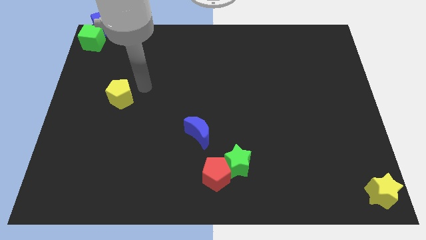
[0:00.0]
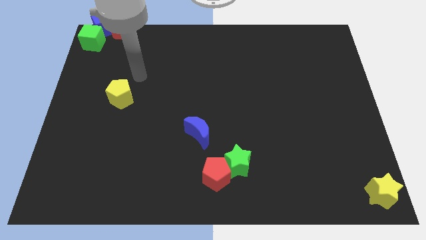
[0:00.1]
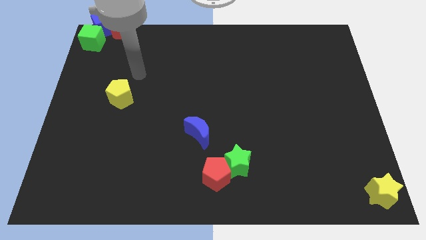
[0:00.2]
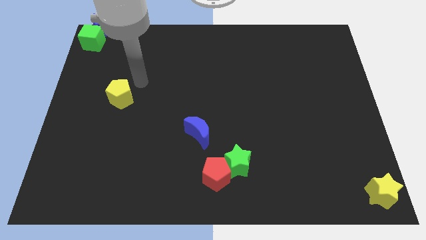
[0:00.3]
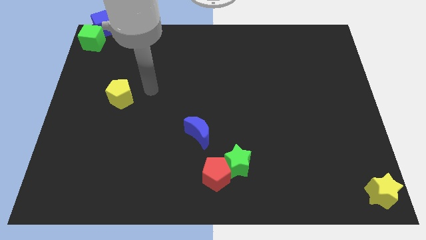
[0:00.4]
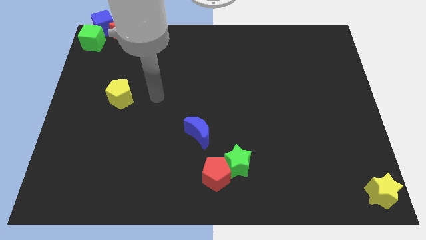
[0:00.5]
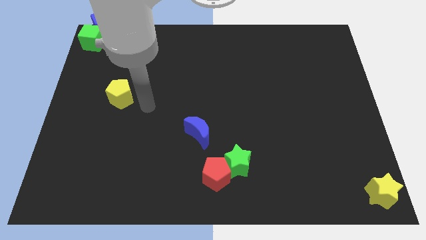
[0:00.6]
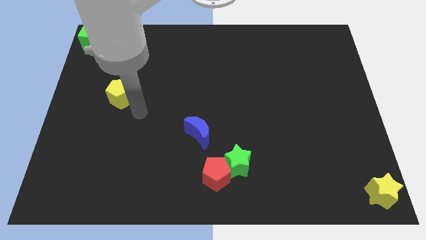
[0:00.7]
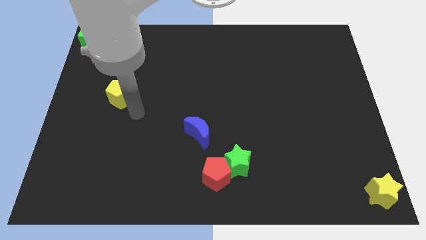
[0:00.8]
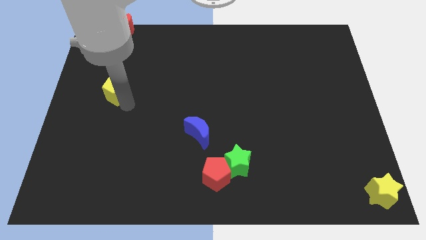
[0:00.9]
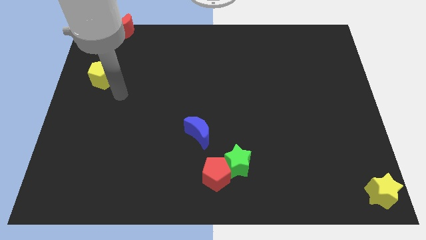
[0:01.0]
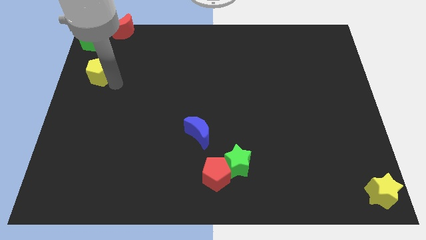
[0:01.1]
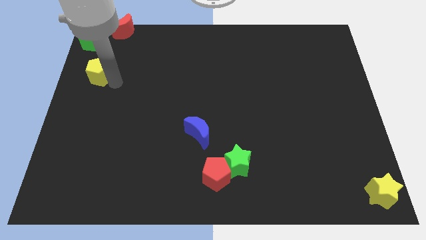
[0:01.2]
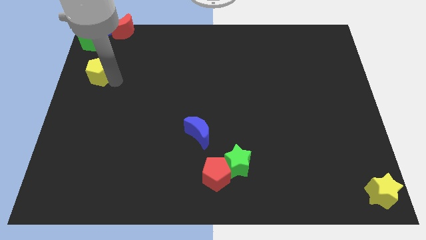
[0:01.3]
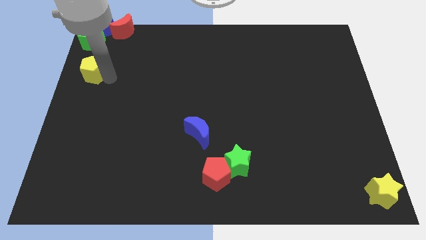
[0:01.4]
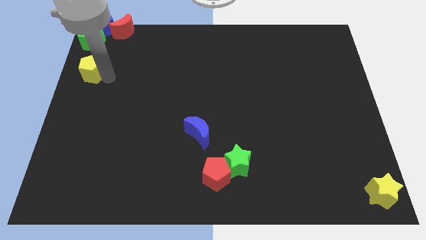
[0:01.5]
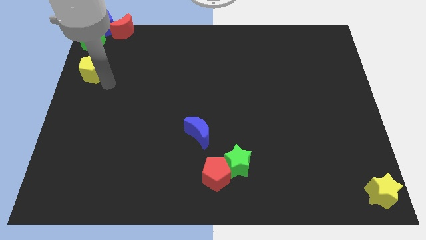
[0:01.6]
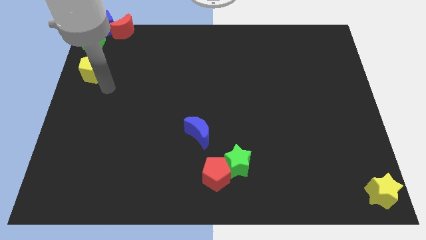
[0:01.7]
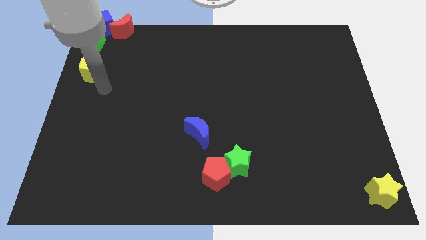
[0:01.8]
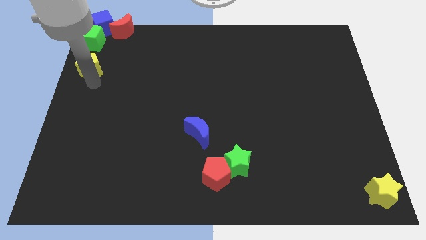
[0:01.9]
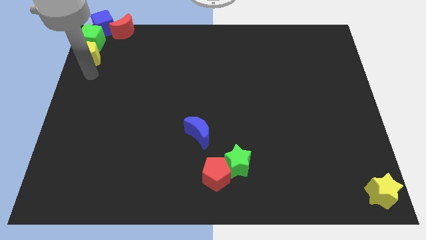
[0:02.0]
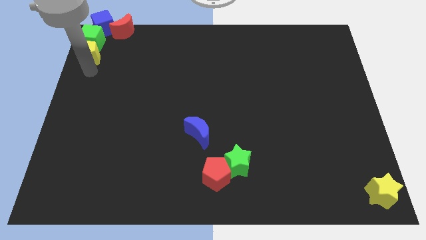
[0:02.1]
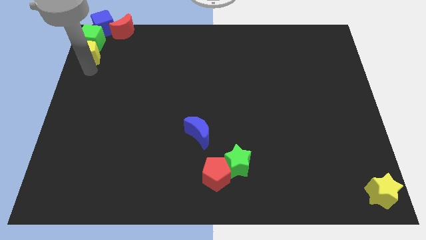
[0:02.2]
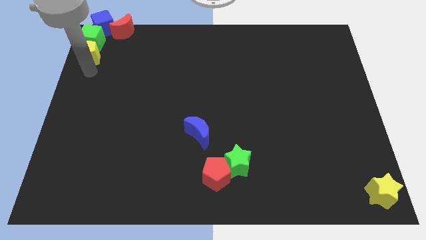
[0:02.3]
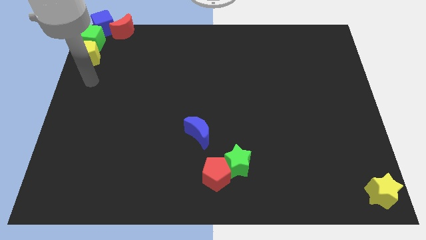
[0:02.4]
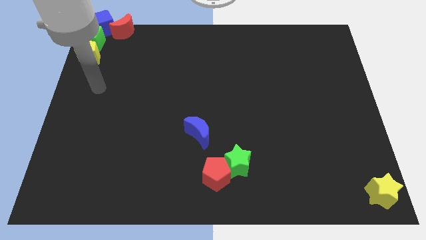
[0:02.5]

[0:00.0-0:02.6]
place the yellow pentagon below into green cube

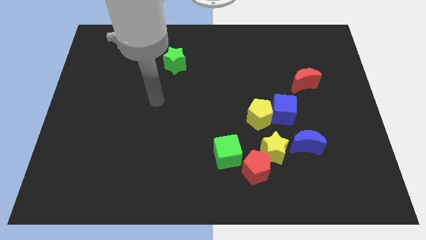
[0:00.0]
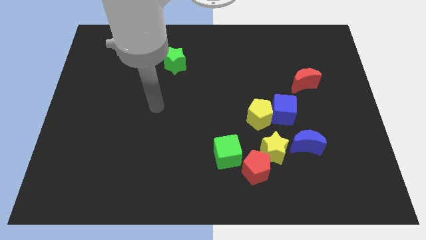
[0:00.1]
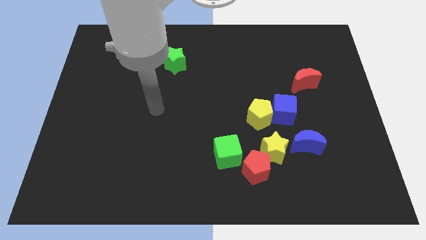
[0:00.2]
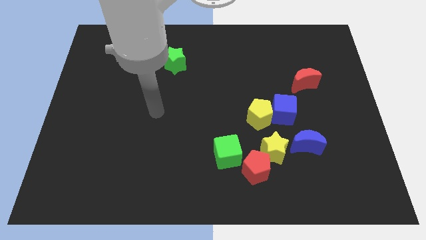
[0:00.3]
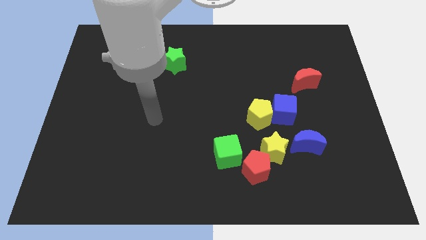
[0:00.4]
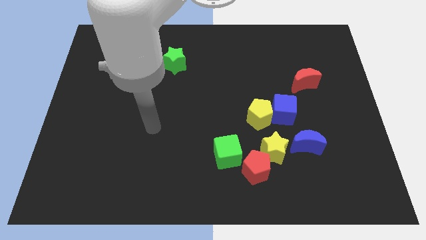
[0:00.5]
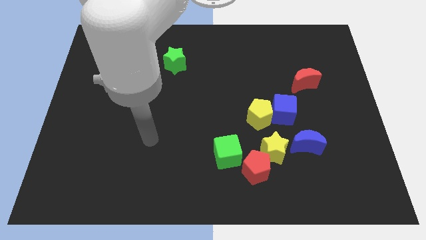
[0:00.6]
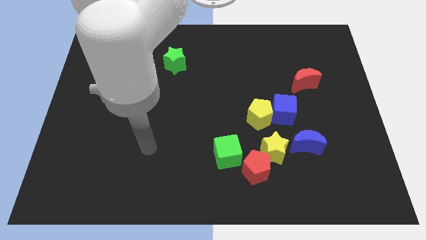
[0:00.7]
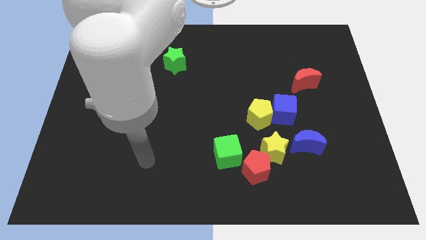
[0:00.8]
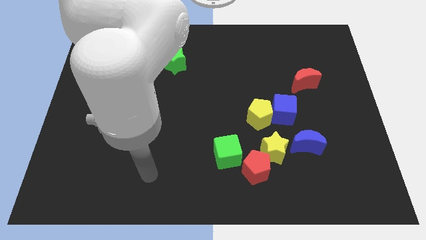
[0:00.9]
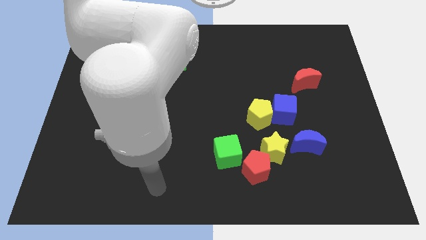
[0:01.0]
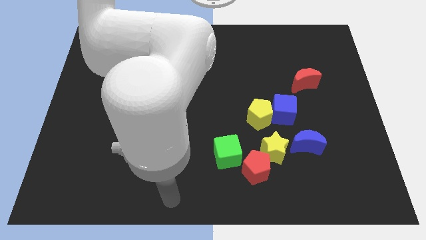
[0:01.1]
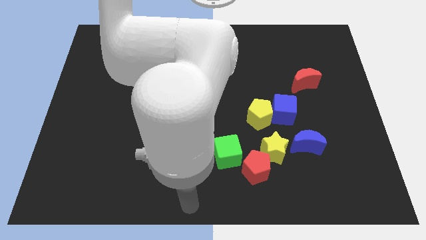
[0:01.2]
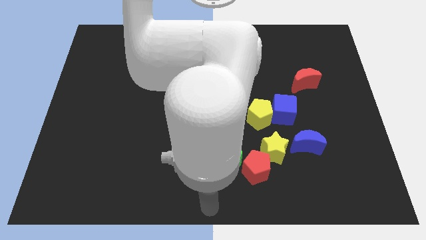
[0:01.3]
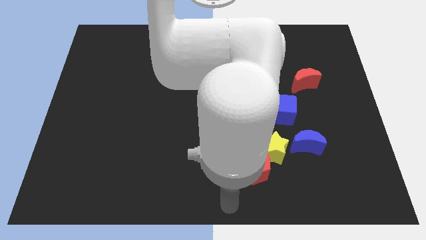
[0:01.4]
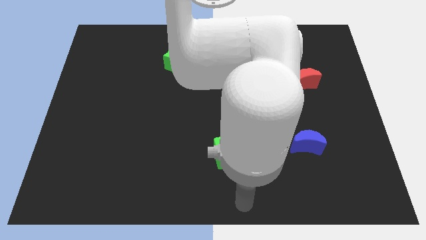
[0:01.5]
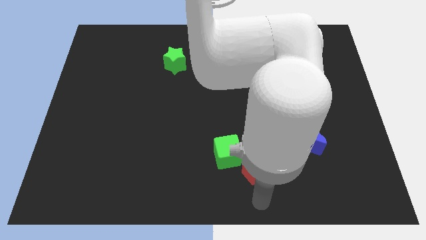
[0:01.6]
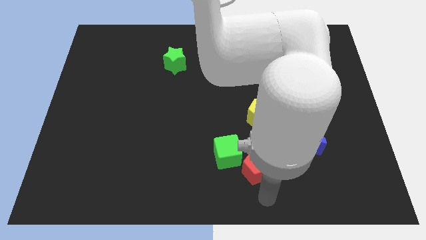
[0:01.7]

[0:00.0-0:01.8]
point your arm at the bottom of the red pentagon

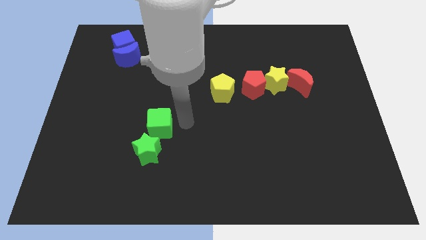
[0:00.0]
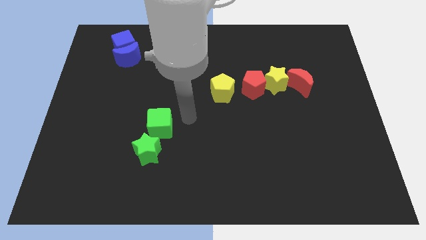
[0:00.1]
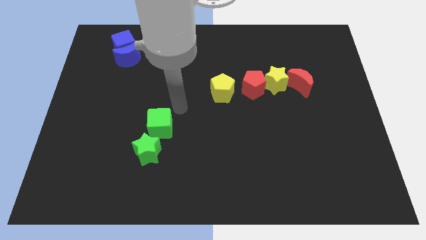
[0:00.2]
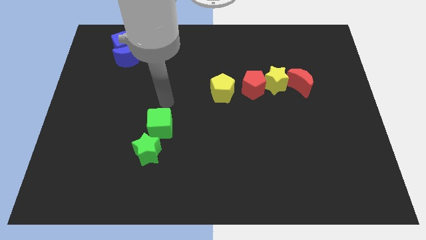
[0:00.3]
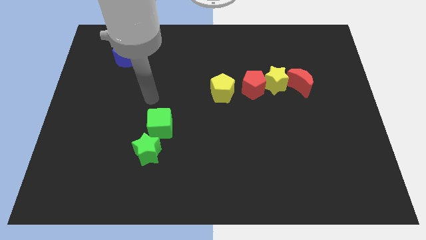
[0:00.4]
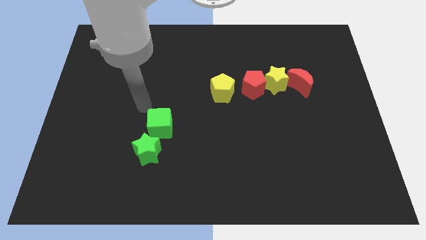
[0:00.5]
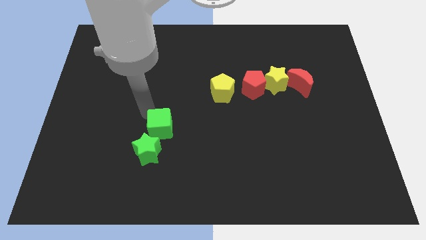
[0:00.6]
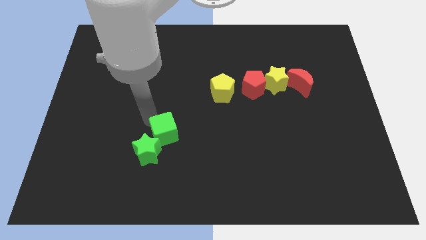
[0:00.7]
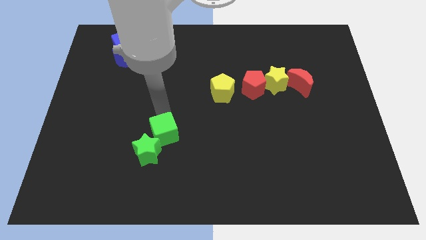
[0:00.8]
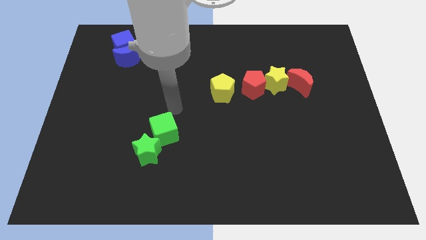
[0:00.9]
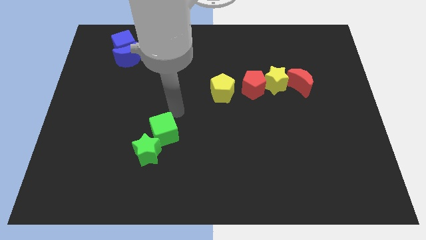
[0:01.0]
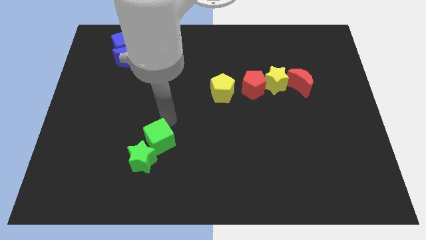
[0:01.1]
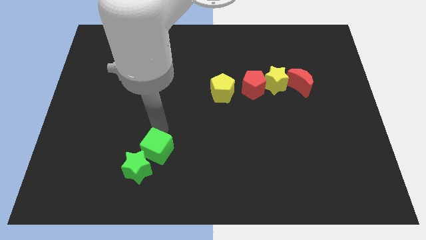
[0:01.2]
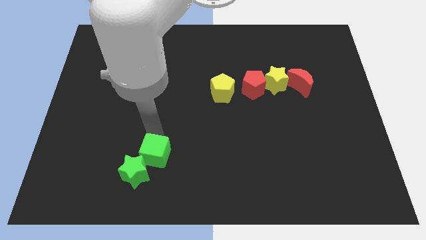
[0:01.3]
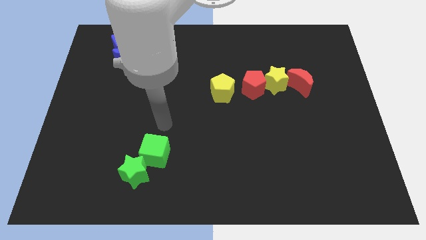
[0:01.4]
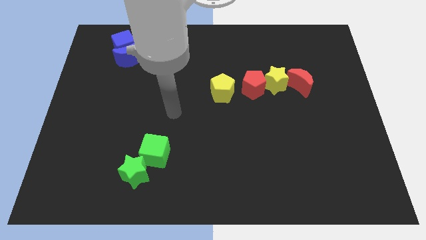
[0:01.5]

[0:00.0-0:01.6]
push the green blocks to the bottom side

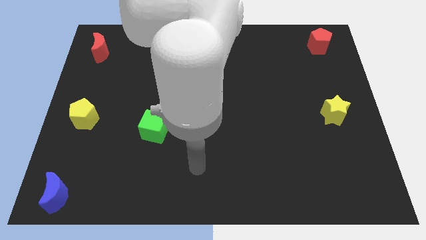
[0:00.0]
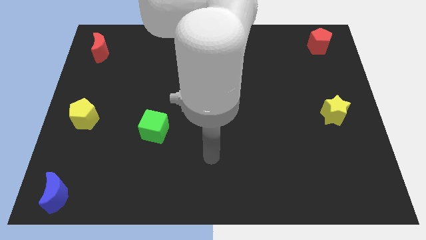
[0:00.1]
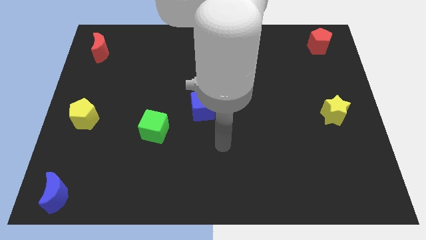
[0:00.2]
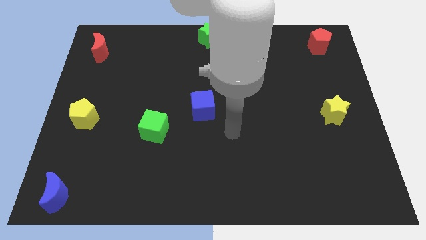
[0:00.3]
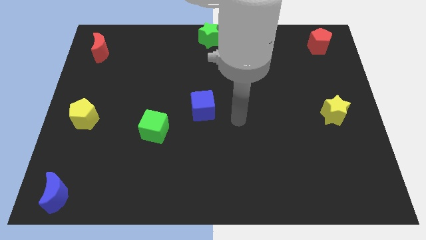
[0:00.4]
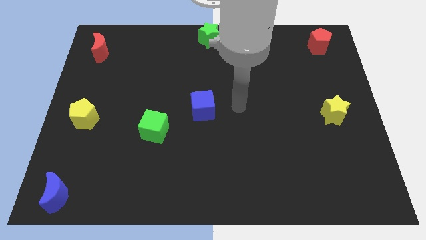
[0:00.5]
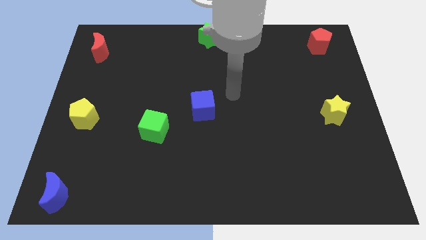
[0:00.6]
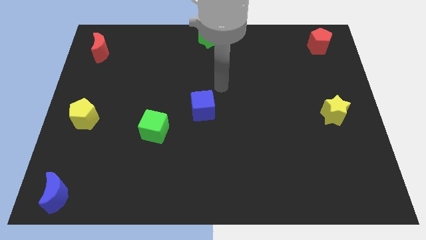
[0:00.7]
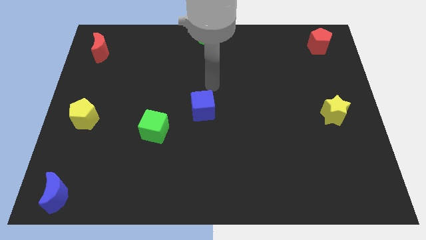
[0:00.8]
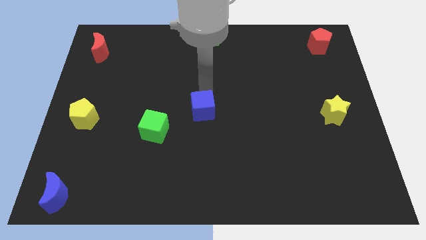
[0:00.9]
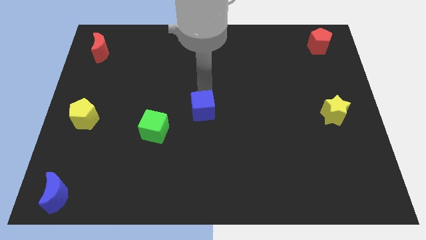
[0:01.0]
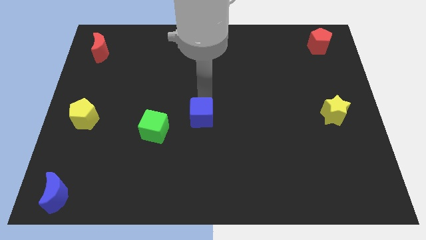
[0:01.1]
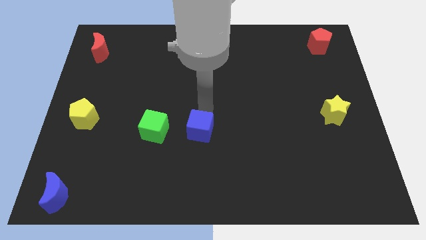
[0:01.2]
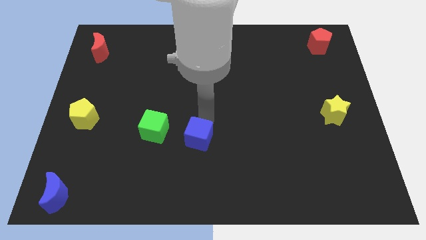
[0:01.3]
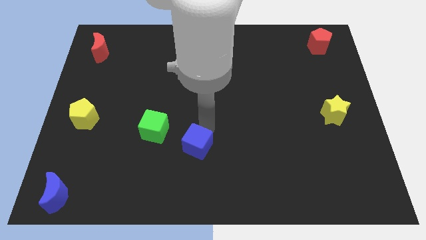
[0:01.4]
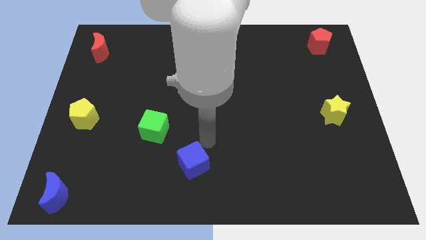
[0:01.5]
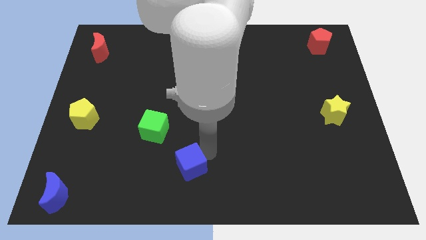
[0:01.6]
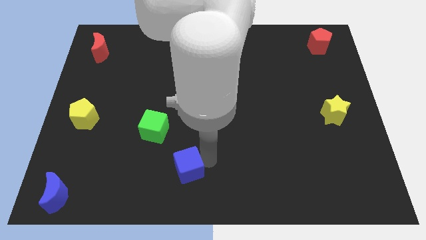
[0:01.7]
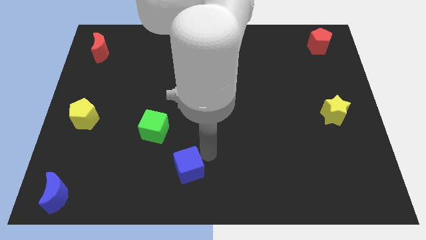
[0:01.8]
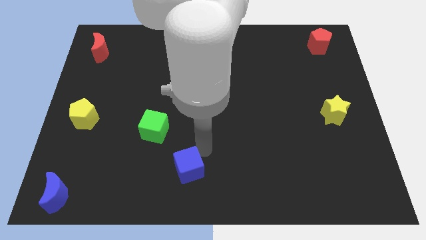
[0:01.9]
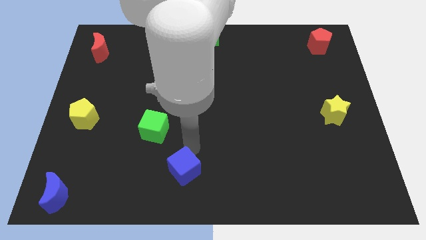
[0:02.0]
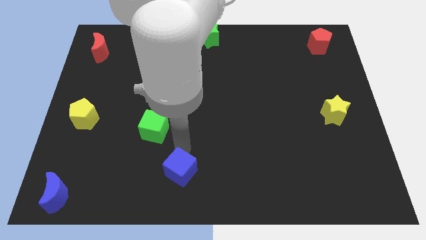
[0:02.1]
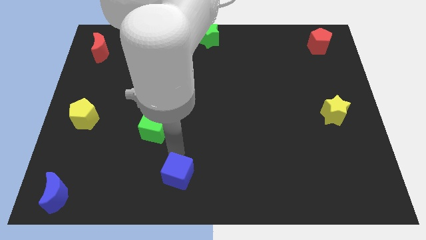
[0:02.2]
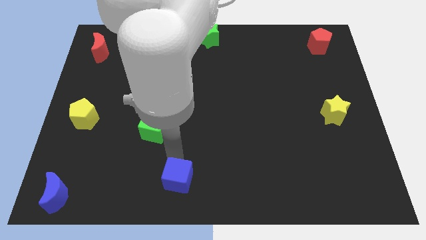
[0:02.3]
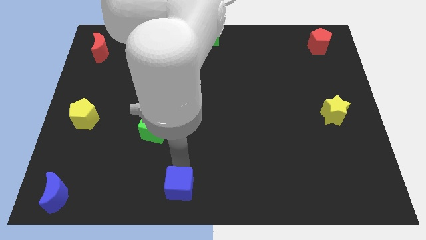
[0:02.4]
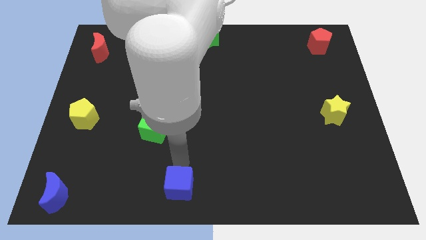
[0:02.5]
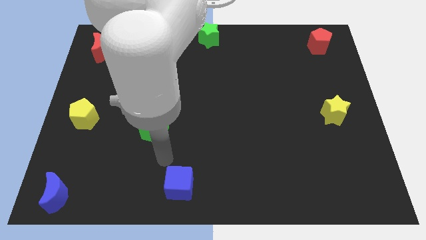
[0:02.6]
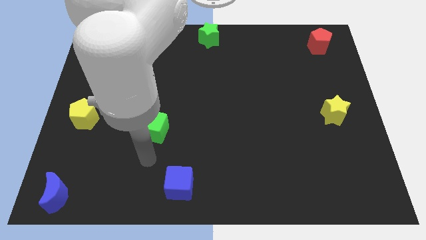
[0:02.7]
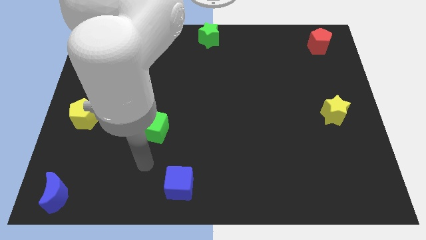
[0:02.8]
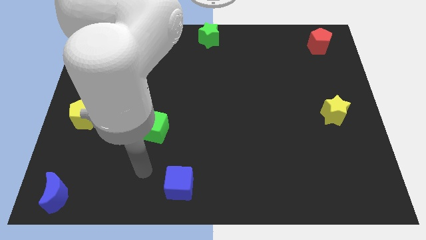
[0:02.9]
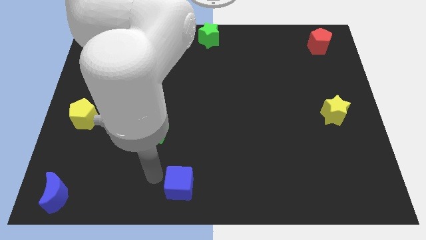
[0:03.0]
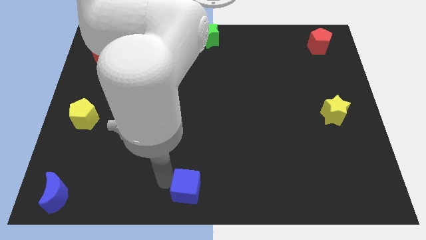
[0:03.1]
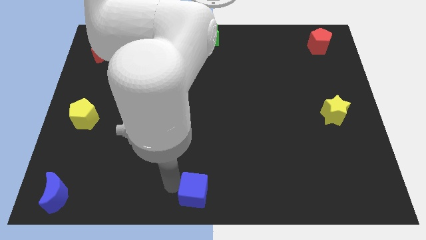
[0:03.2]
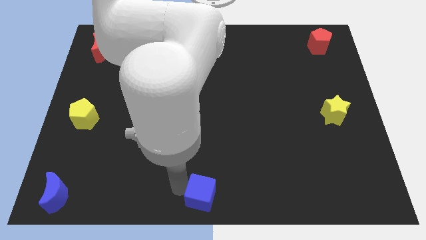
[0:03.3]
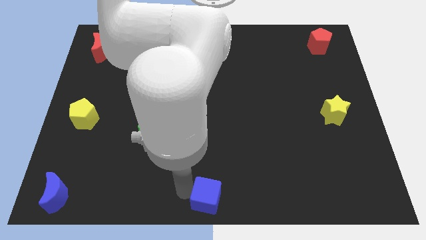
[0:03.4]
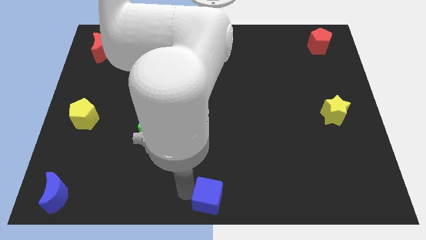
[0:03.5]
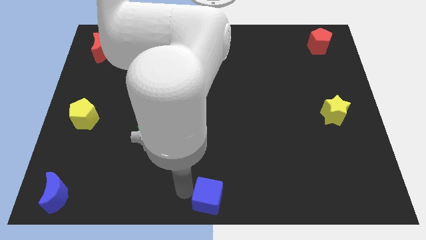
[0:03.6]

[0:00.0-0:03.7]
place blue cube to the bottom center of the board
